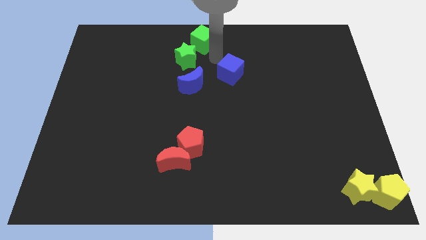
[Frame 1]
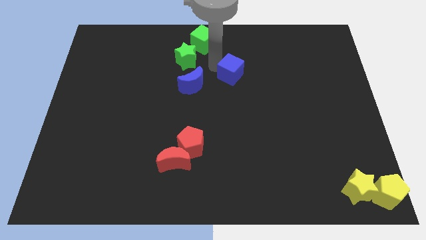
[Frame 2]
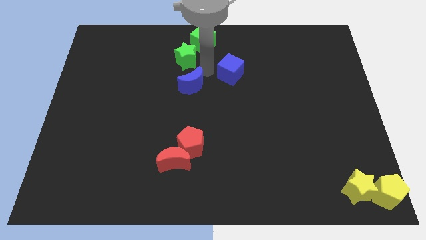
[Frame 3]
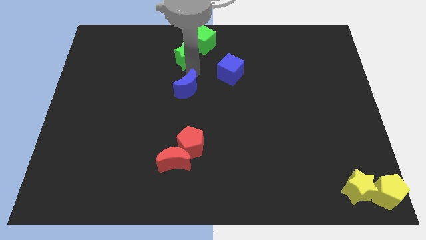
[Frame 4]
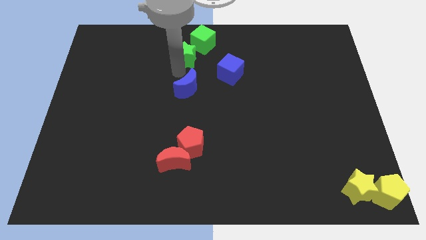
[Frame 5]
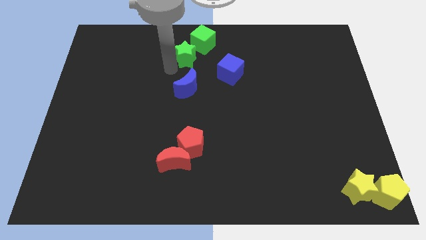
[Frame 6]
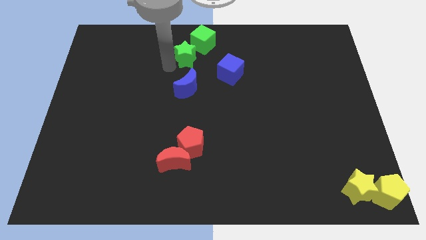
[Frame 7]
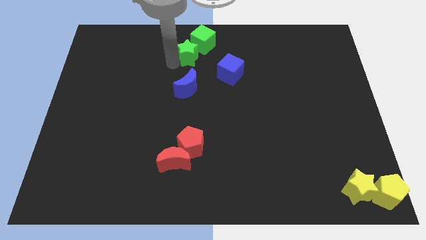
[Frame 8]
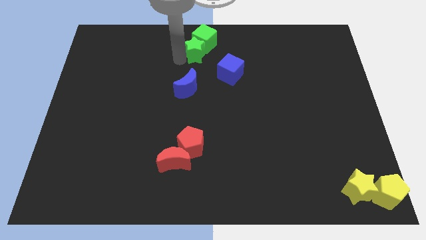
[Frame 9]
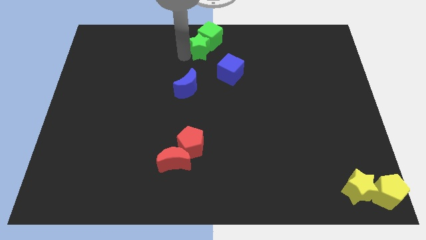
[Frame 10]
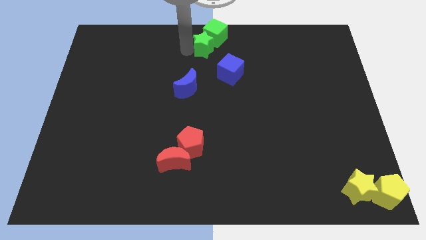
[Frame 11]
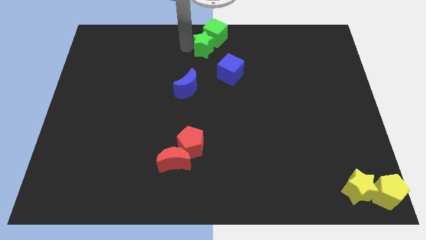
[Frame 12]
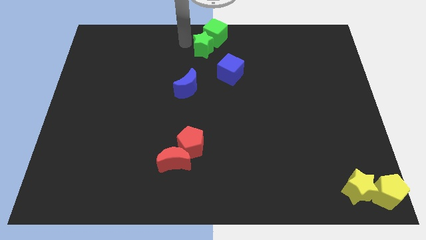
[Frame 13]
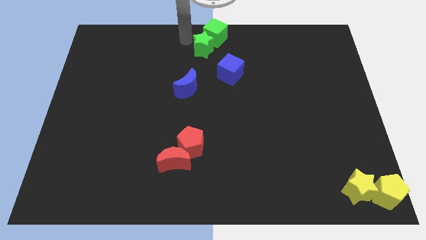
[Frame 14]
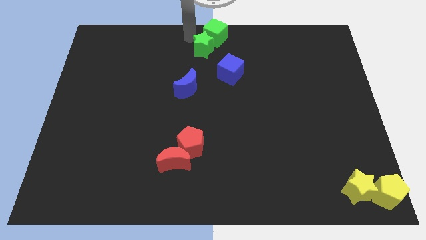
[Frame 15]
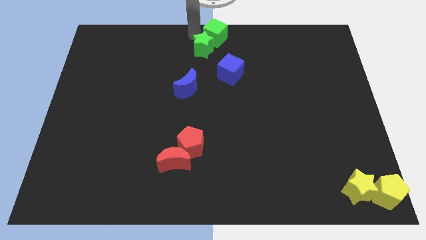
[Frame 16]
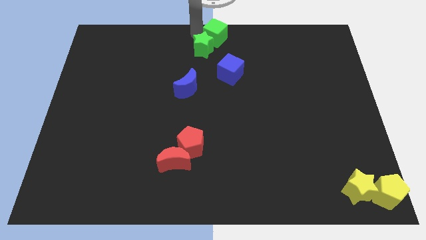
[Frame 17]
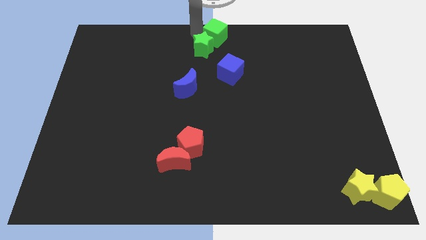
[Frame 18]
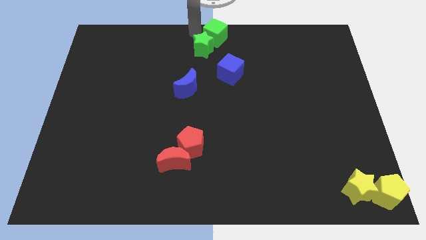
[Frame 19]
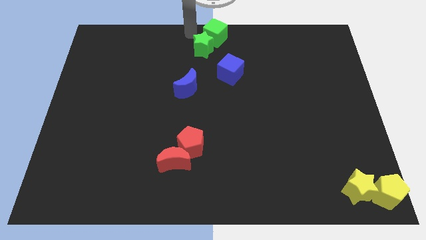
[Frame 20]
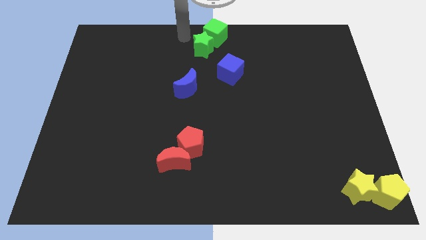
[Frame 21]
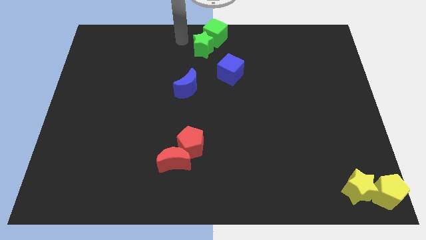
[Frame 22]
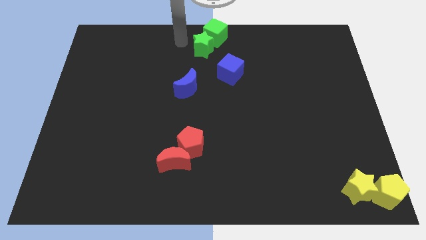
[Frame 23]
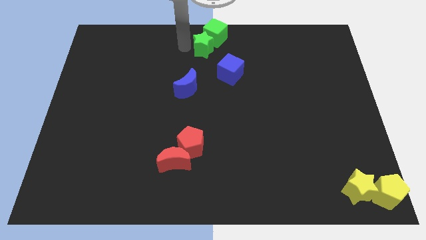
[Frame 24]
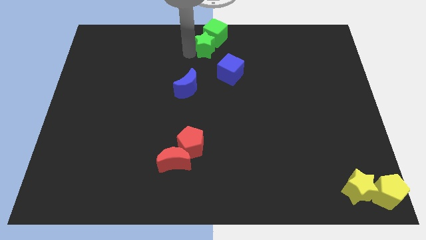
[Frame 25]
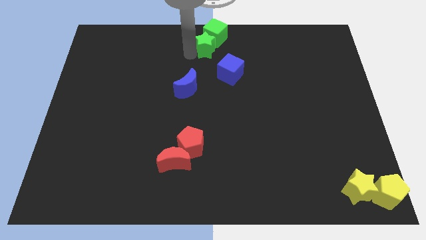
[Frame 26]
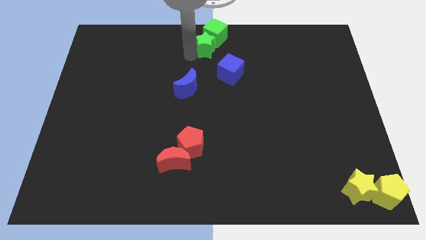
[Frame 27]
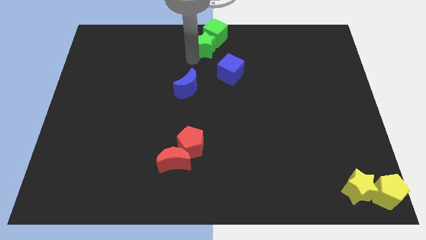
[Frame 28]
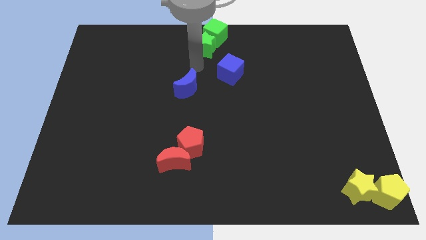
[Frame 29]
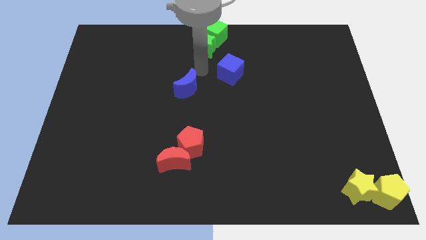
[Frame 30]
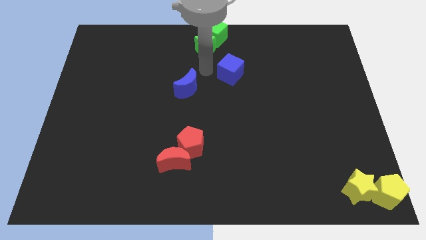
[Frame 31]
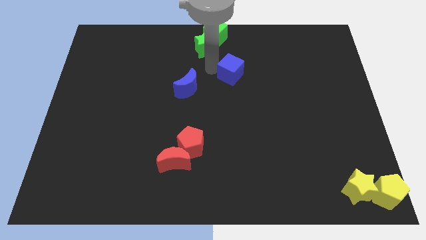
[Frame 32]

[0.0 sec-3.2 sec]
place both the green blocks at the top center

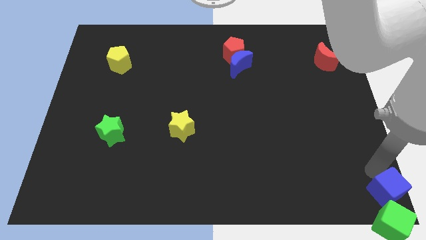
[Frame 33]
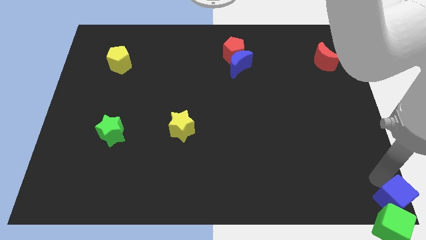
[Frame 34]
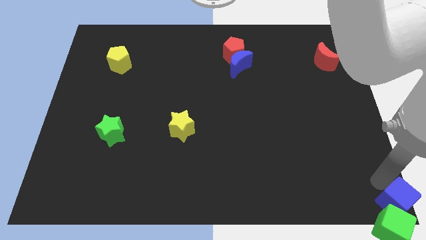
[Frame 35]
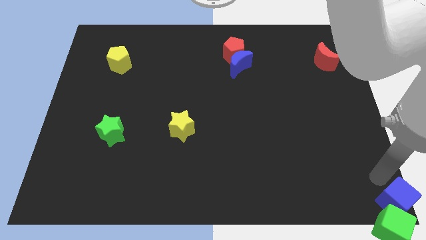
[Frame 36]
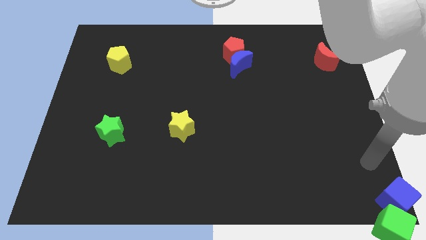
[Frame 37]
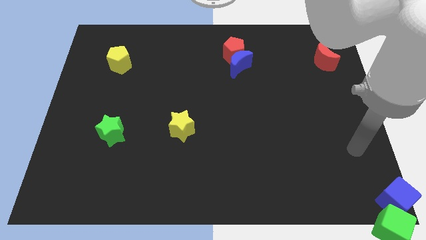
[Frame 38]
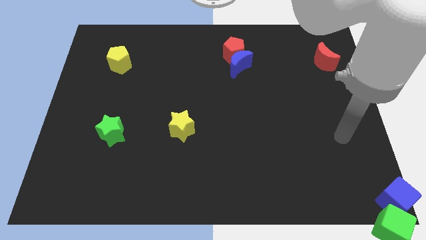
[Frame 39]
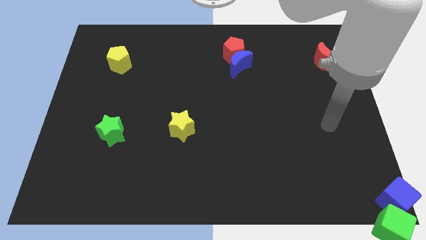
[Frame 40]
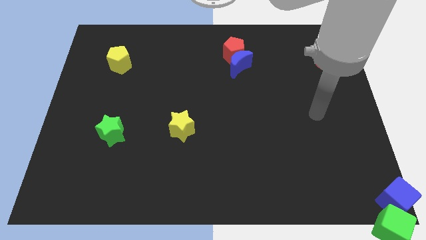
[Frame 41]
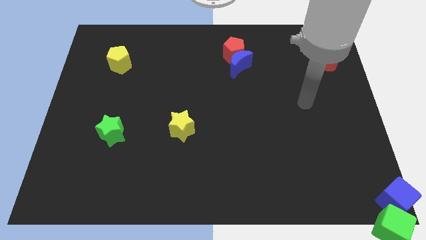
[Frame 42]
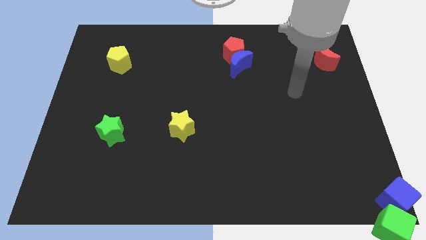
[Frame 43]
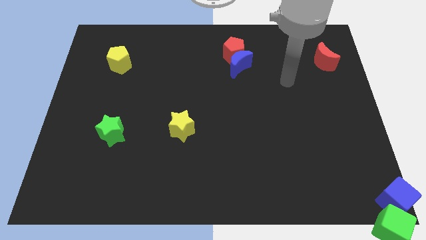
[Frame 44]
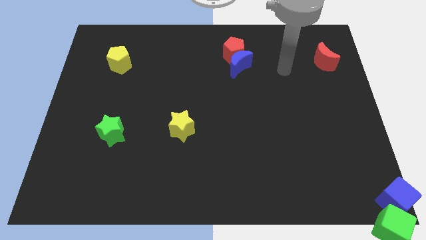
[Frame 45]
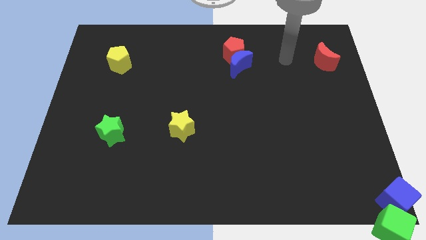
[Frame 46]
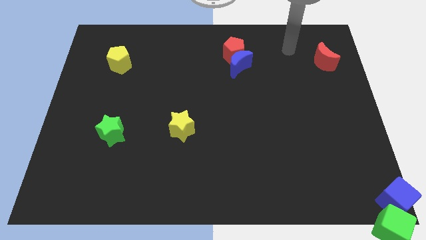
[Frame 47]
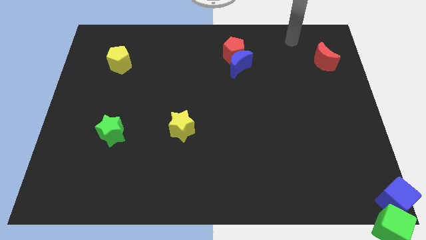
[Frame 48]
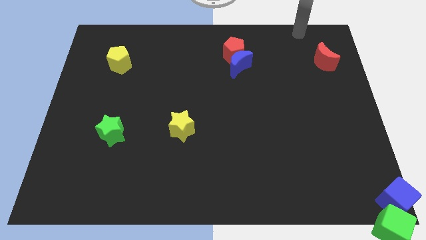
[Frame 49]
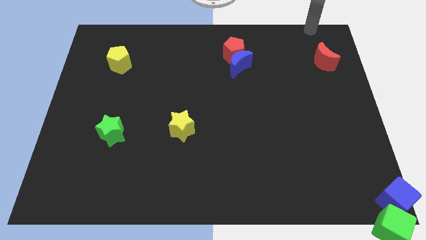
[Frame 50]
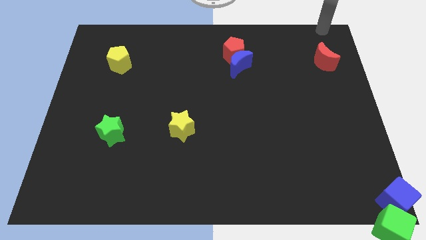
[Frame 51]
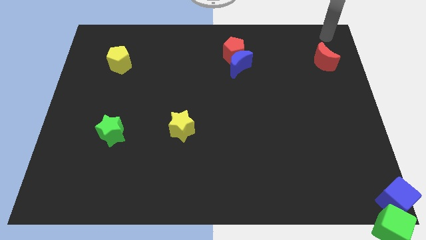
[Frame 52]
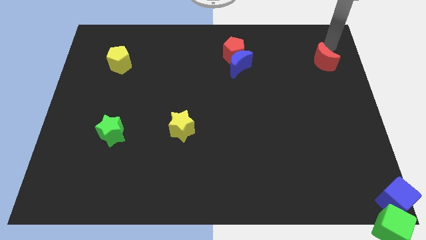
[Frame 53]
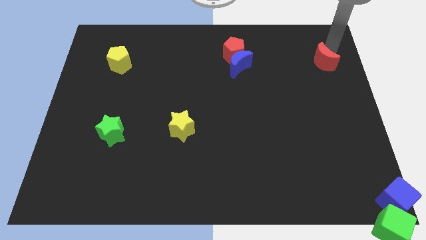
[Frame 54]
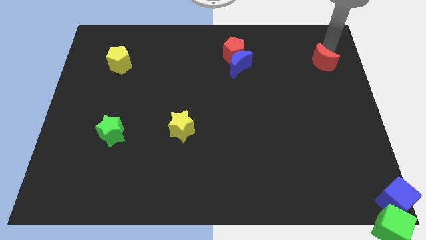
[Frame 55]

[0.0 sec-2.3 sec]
move your arm away from the blue cube

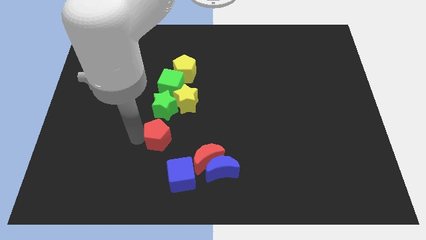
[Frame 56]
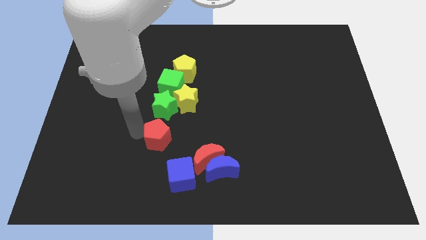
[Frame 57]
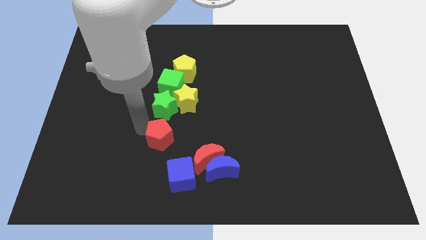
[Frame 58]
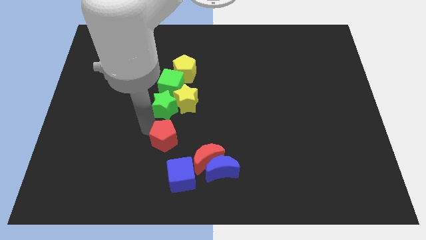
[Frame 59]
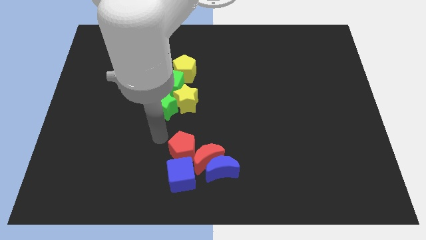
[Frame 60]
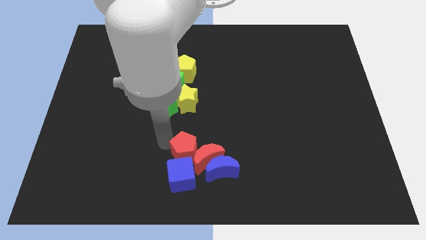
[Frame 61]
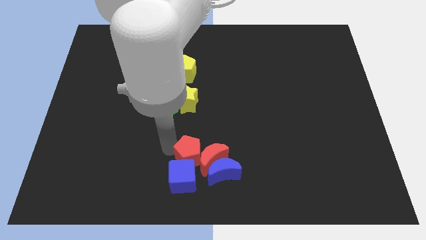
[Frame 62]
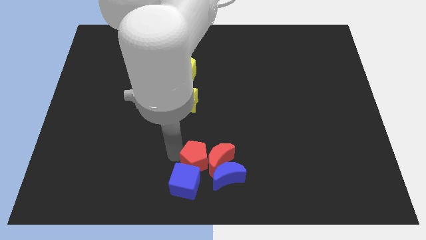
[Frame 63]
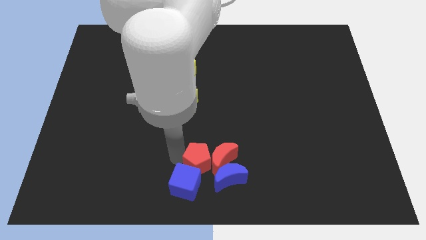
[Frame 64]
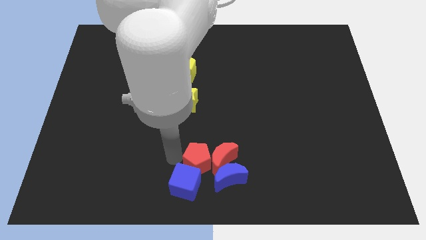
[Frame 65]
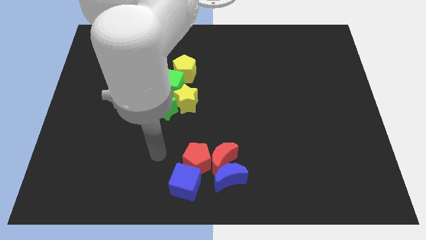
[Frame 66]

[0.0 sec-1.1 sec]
move the red pentagon into the red moon

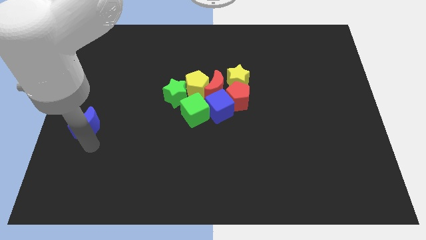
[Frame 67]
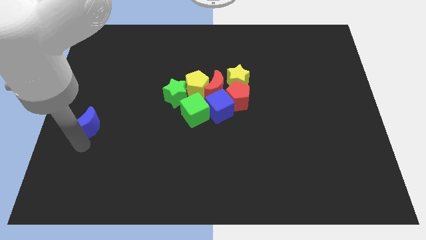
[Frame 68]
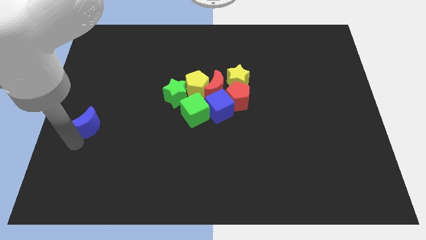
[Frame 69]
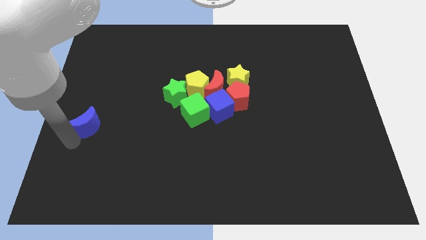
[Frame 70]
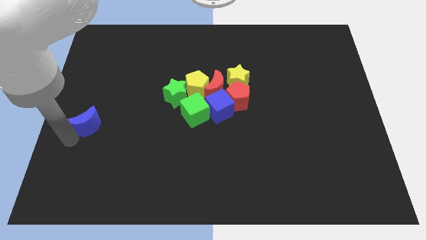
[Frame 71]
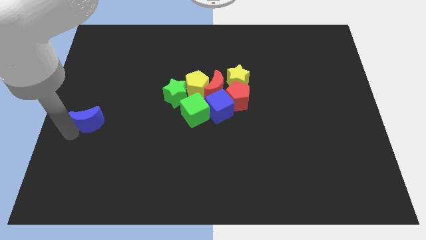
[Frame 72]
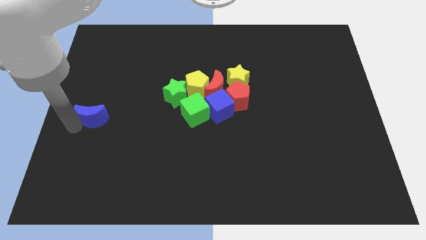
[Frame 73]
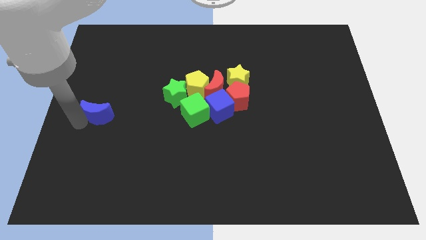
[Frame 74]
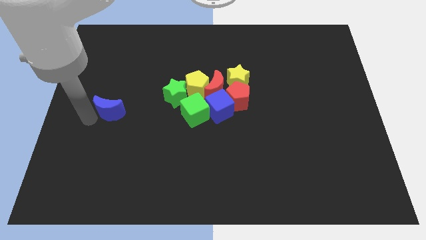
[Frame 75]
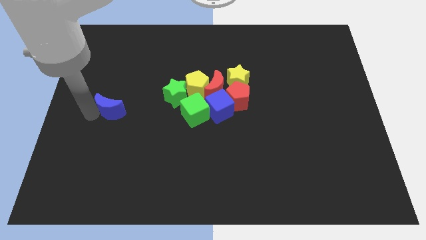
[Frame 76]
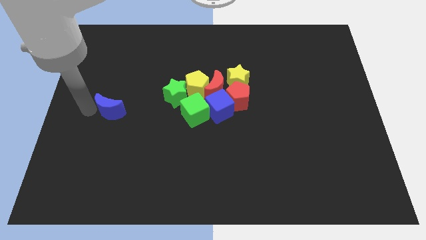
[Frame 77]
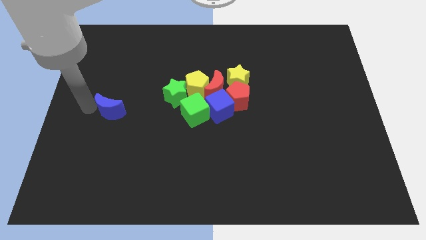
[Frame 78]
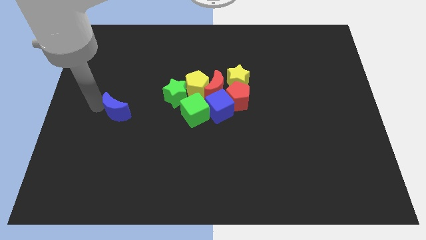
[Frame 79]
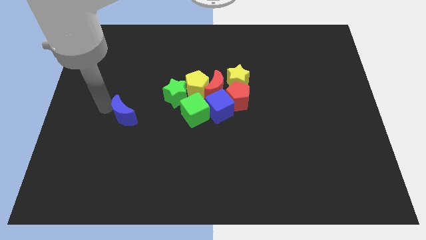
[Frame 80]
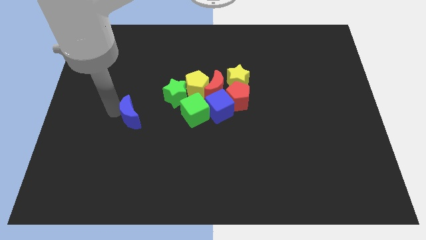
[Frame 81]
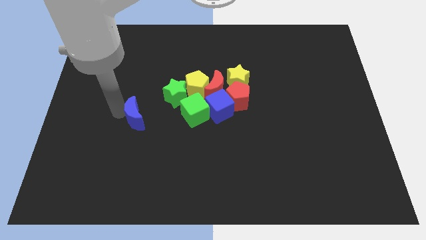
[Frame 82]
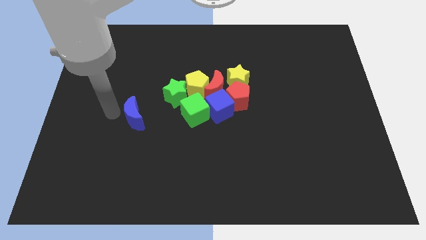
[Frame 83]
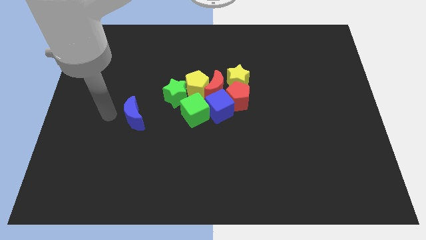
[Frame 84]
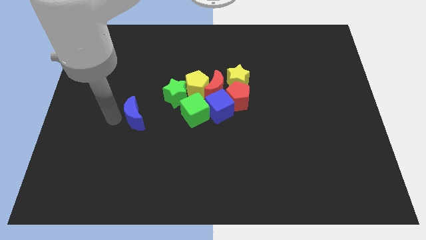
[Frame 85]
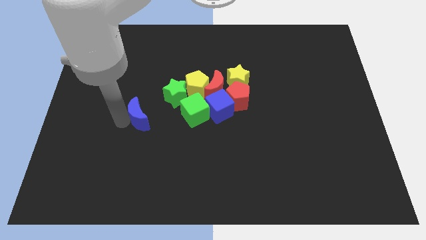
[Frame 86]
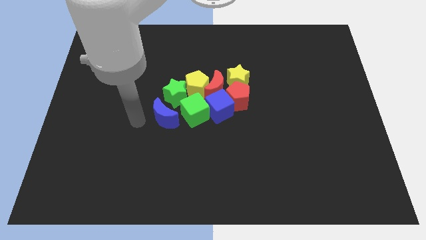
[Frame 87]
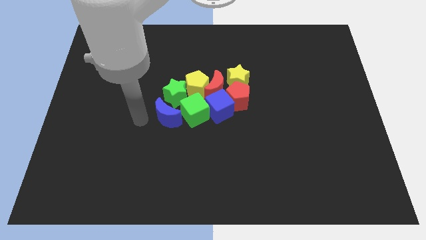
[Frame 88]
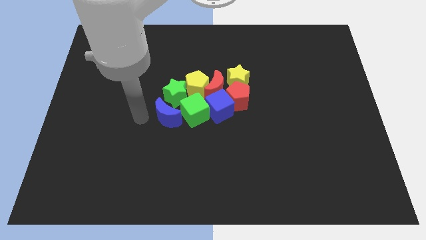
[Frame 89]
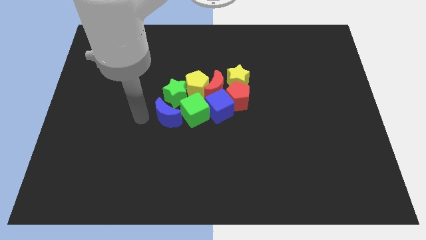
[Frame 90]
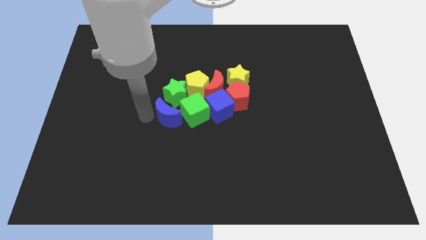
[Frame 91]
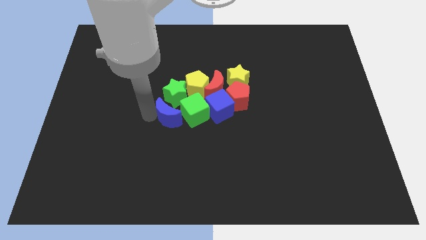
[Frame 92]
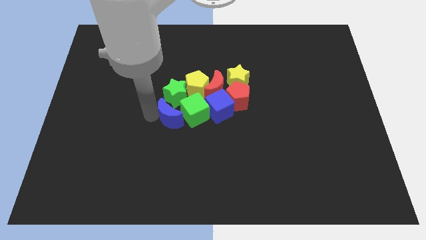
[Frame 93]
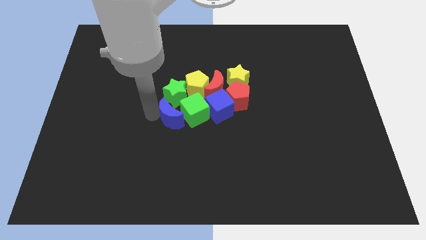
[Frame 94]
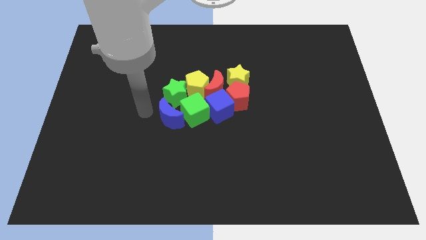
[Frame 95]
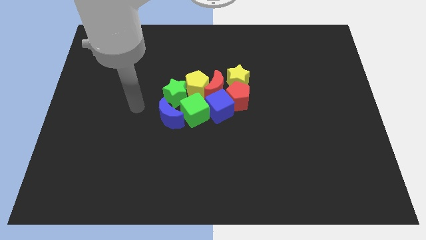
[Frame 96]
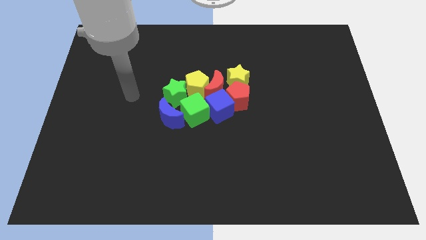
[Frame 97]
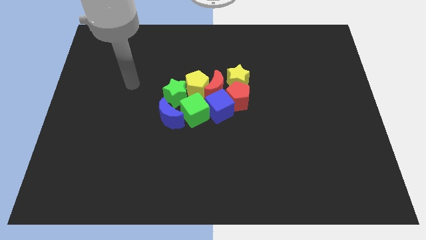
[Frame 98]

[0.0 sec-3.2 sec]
push the blue crescent towards the group of blocks
